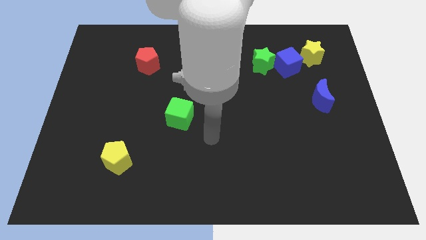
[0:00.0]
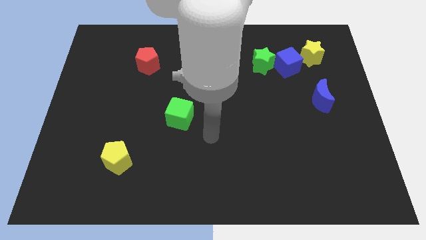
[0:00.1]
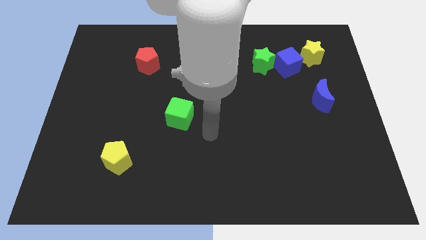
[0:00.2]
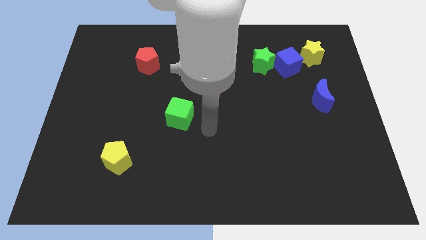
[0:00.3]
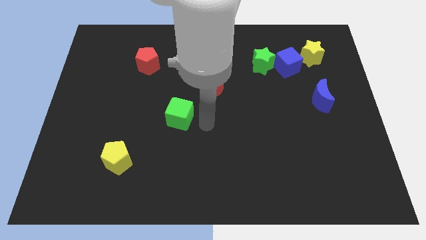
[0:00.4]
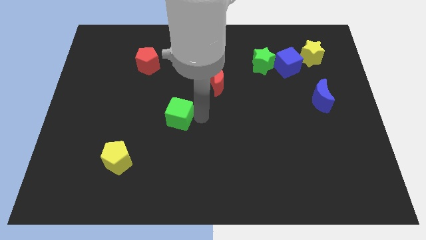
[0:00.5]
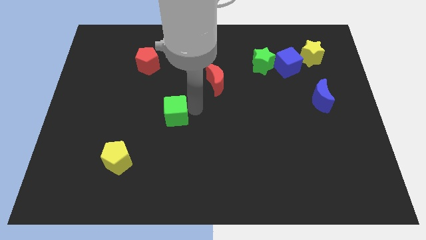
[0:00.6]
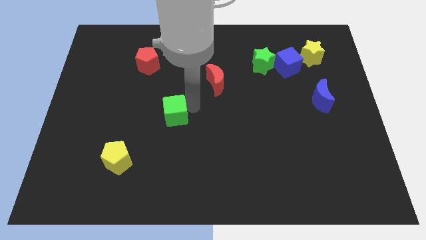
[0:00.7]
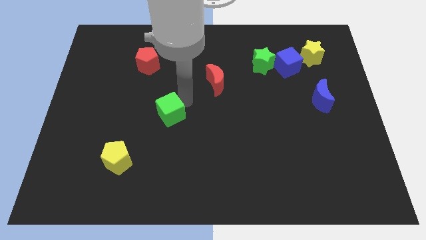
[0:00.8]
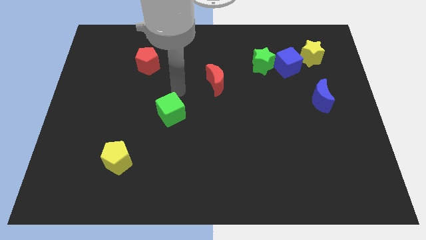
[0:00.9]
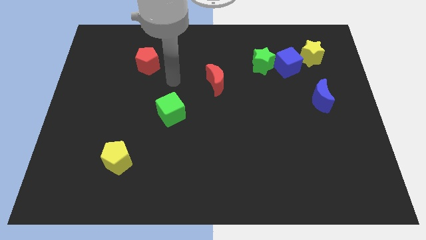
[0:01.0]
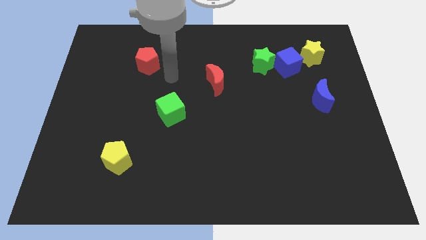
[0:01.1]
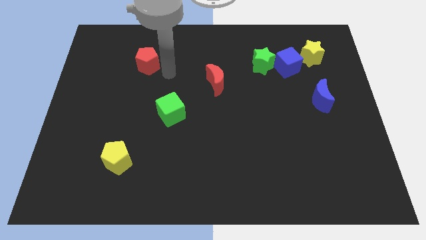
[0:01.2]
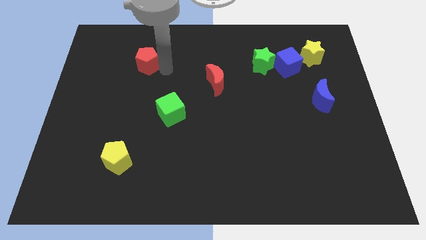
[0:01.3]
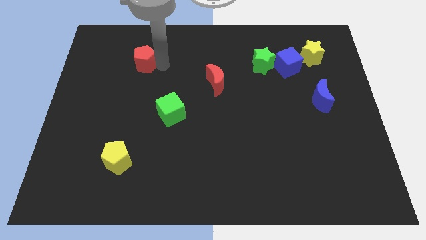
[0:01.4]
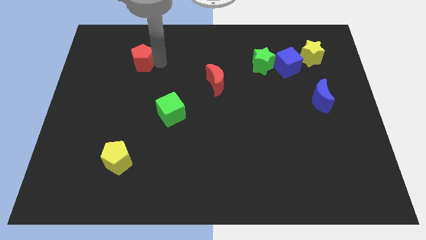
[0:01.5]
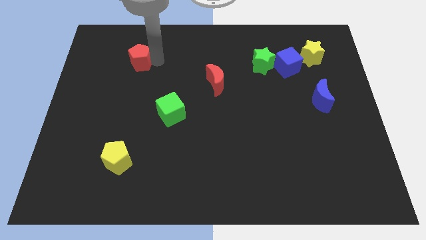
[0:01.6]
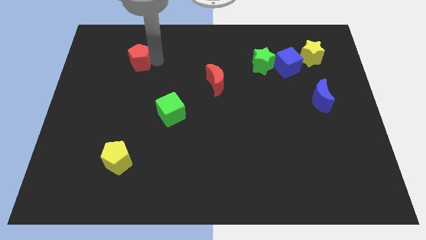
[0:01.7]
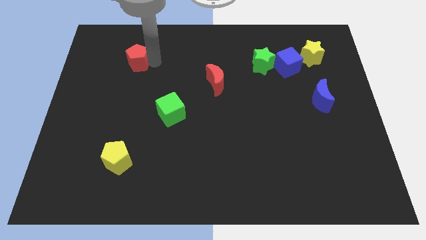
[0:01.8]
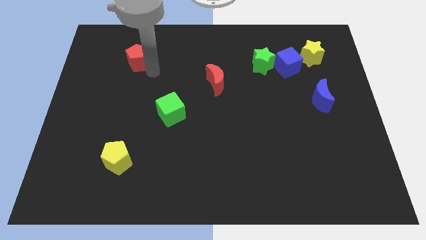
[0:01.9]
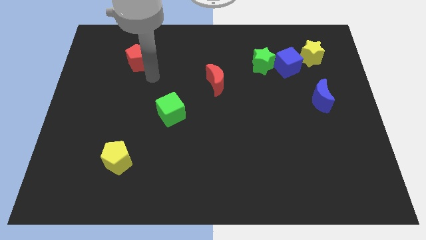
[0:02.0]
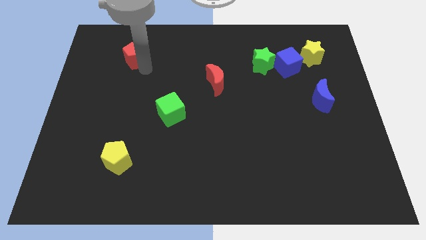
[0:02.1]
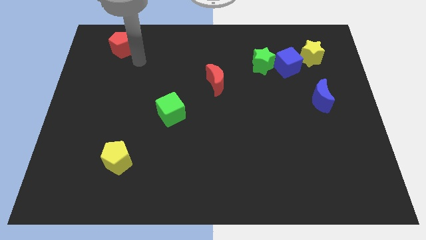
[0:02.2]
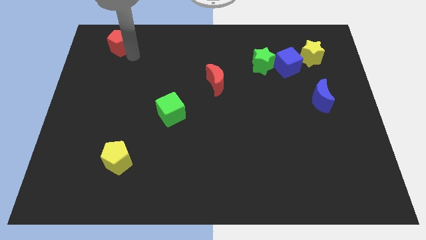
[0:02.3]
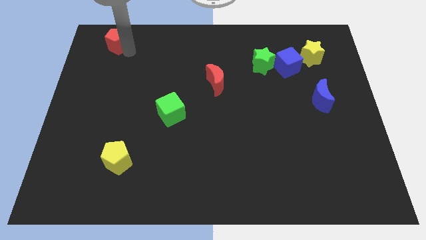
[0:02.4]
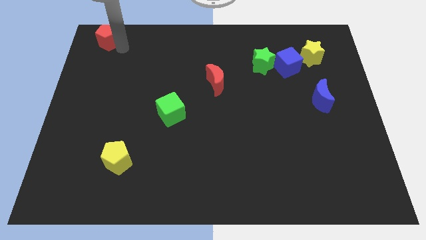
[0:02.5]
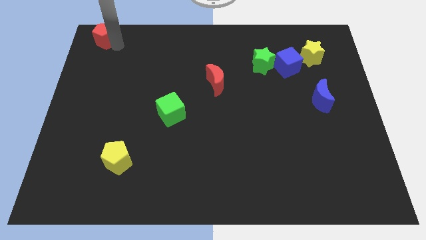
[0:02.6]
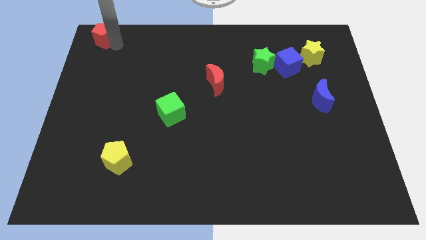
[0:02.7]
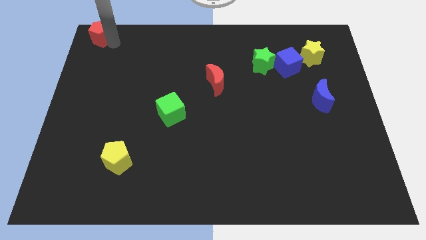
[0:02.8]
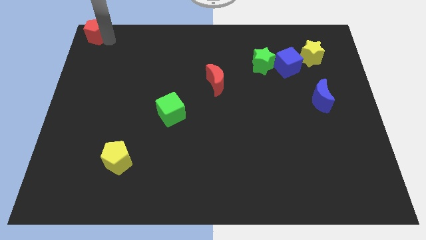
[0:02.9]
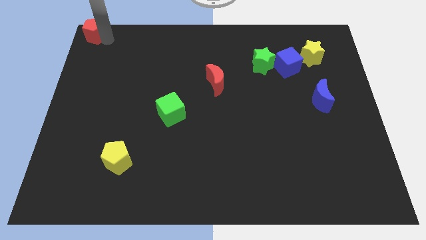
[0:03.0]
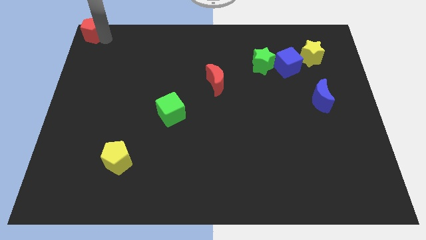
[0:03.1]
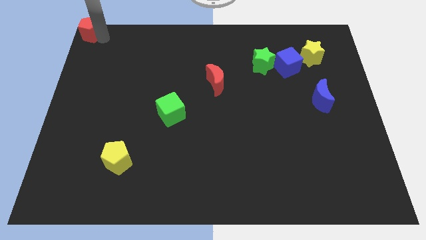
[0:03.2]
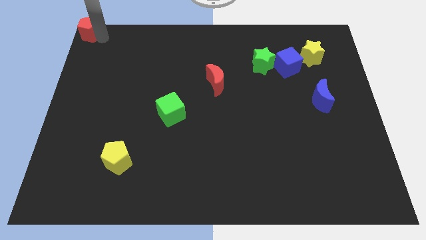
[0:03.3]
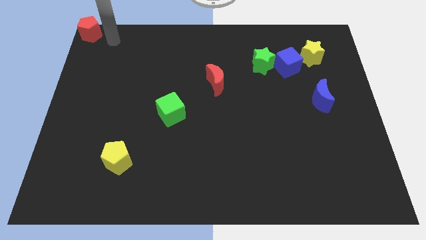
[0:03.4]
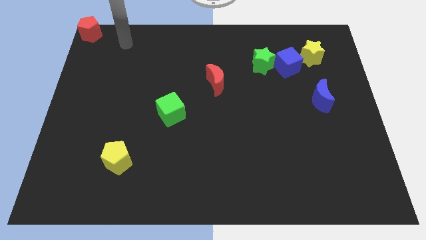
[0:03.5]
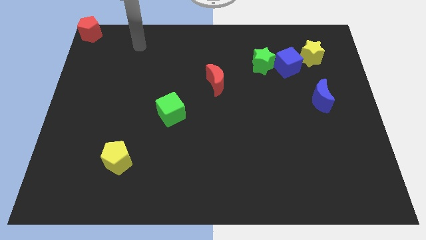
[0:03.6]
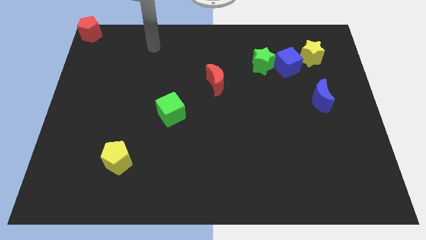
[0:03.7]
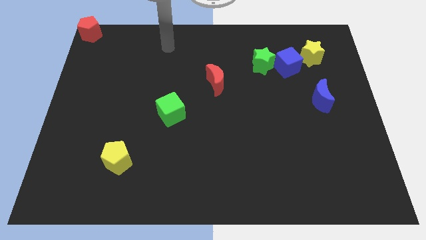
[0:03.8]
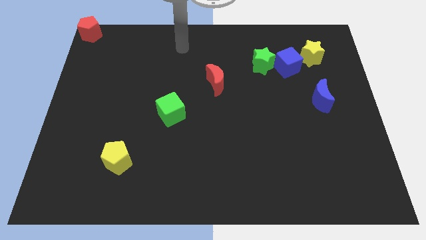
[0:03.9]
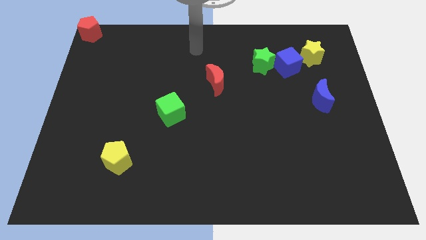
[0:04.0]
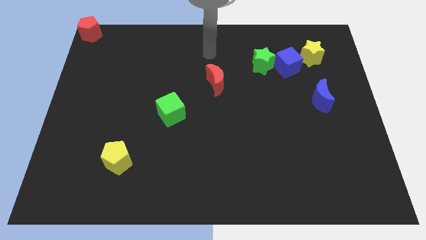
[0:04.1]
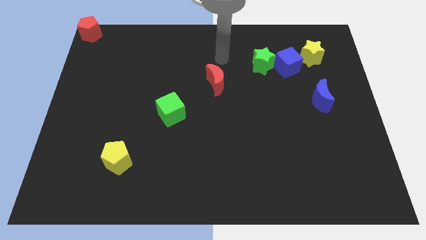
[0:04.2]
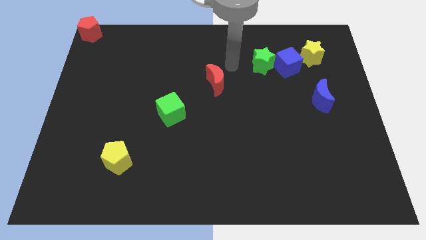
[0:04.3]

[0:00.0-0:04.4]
move the red pentagon to the top left corner of the board

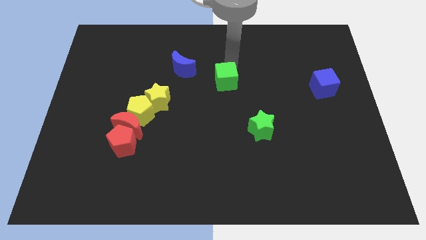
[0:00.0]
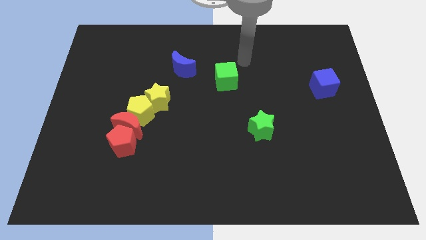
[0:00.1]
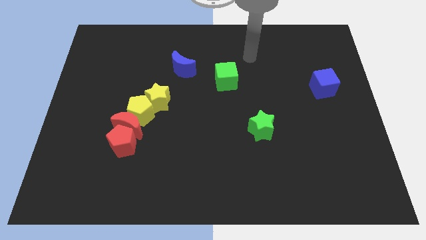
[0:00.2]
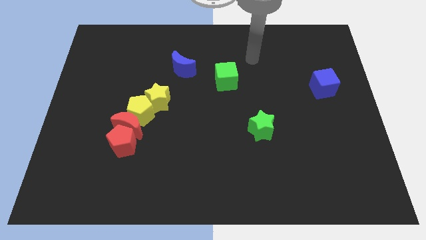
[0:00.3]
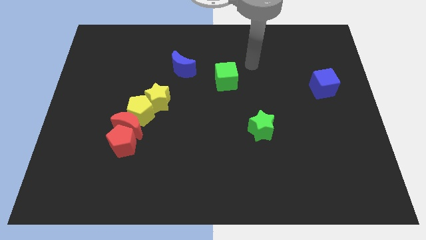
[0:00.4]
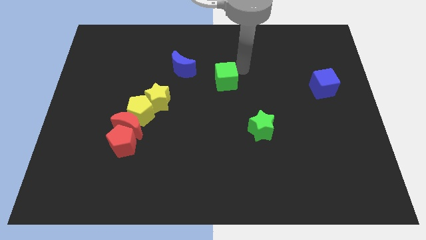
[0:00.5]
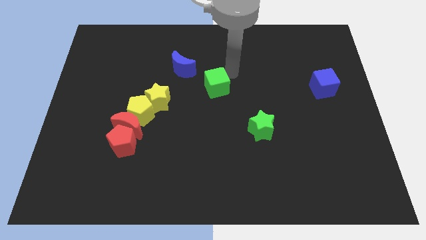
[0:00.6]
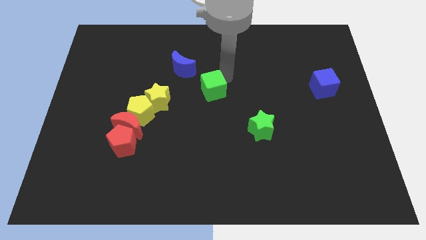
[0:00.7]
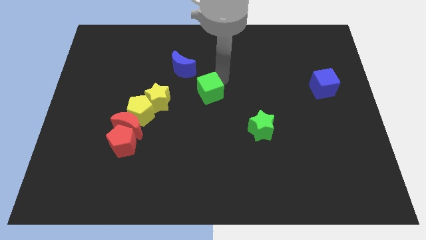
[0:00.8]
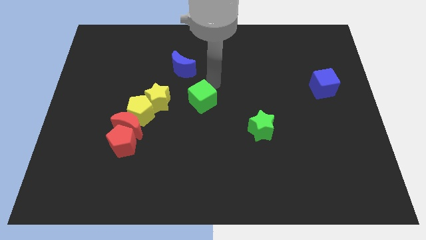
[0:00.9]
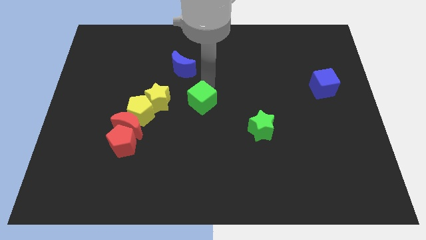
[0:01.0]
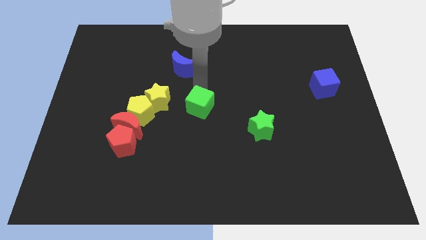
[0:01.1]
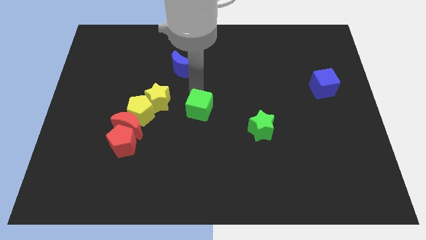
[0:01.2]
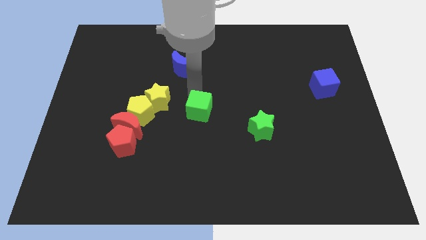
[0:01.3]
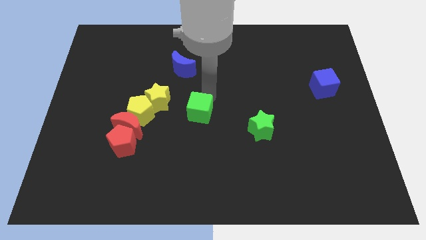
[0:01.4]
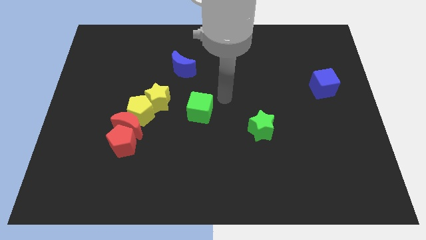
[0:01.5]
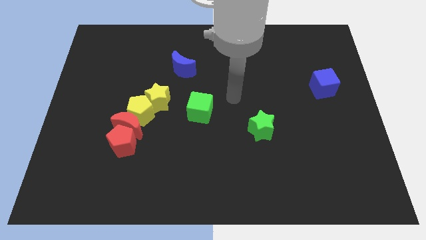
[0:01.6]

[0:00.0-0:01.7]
move the green cube diagonal to the green star

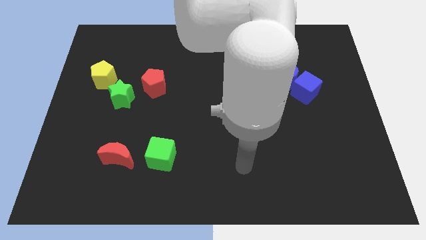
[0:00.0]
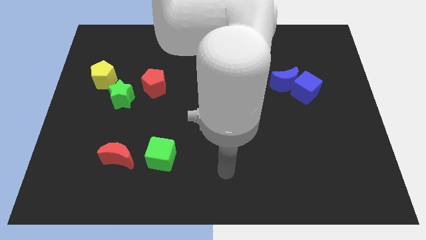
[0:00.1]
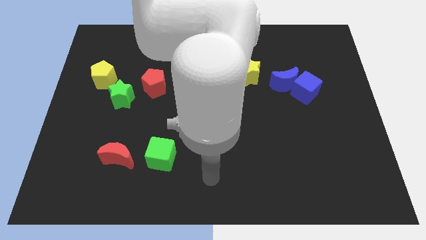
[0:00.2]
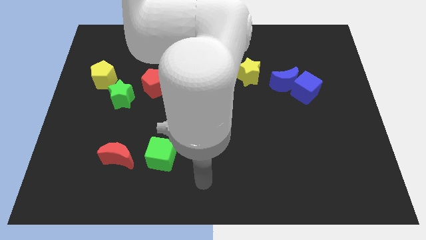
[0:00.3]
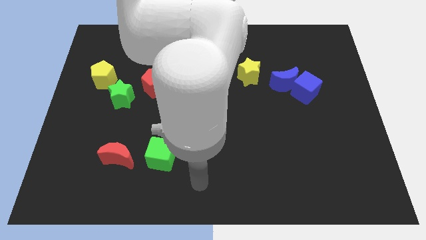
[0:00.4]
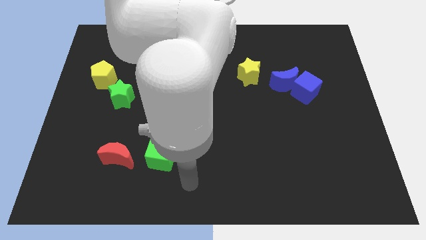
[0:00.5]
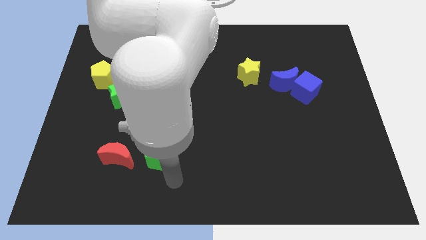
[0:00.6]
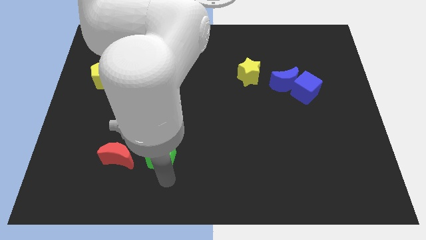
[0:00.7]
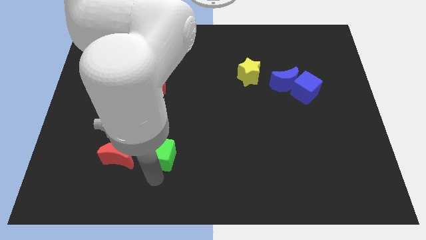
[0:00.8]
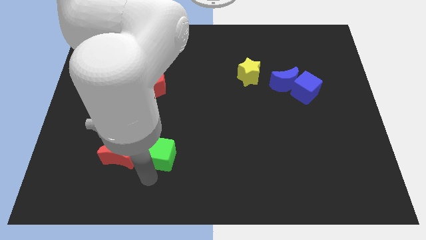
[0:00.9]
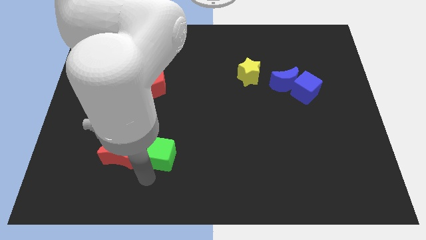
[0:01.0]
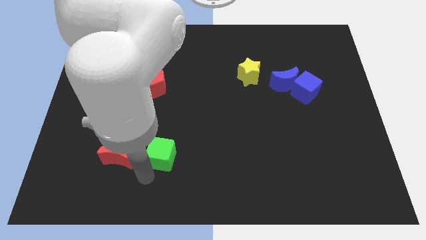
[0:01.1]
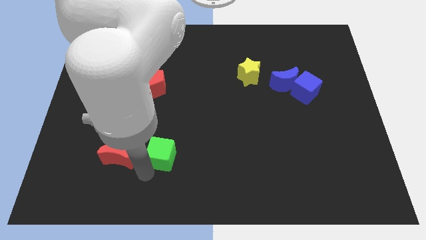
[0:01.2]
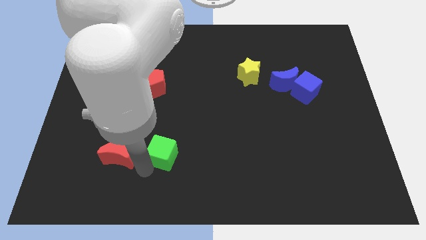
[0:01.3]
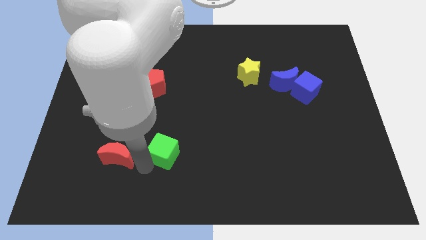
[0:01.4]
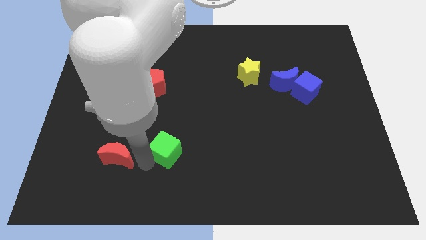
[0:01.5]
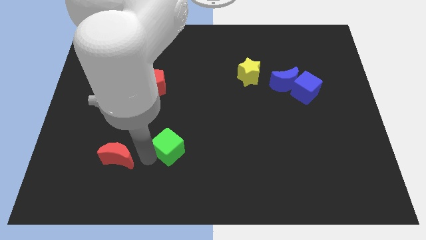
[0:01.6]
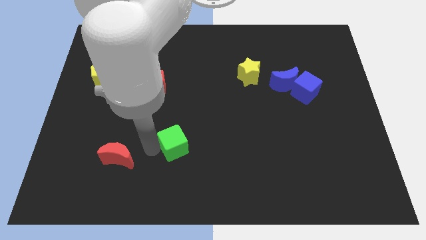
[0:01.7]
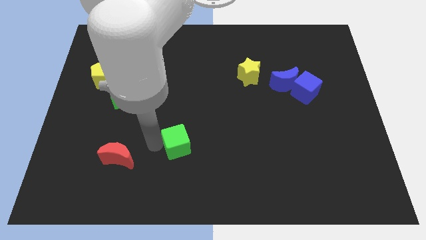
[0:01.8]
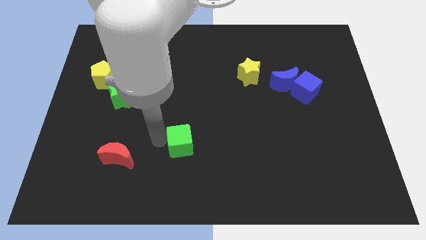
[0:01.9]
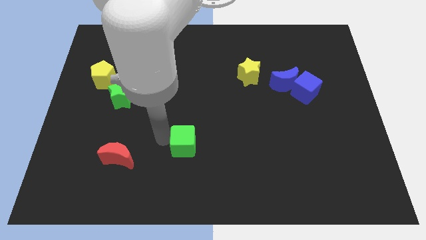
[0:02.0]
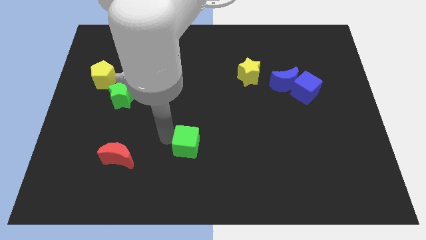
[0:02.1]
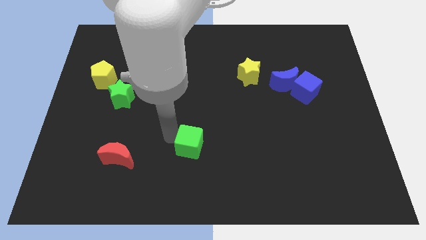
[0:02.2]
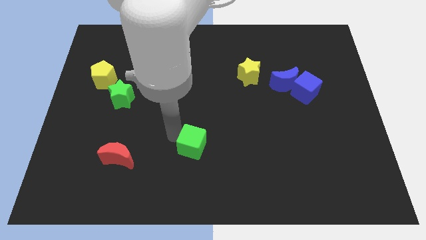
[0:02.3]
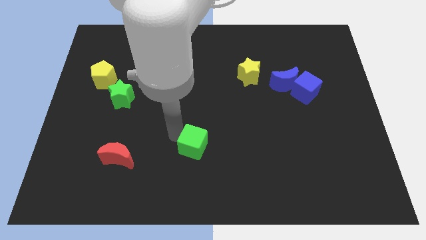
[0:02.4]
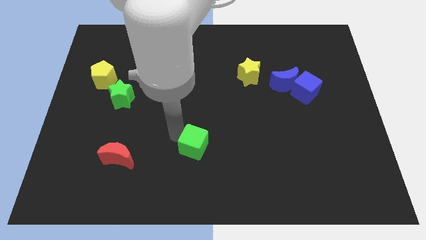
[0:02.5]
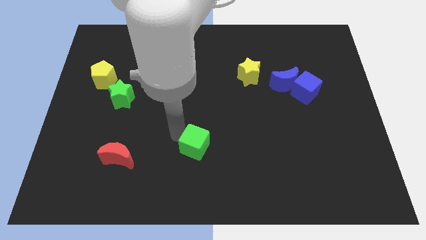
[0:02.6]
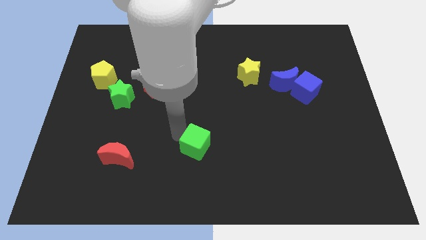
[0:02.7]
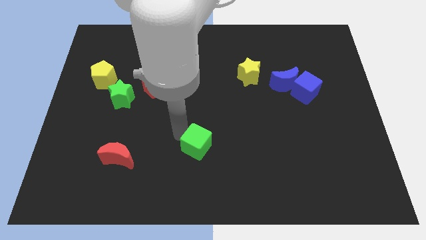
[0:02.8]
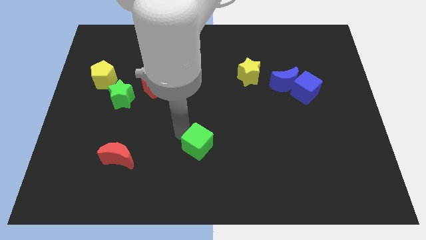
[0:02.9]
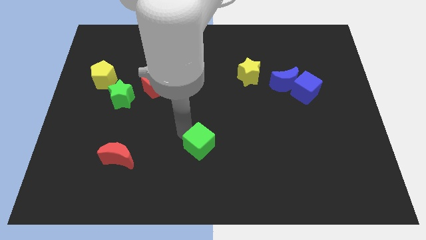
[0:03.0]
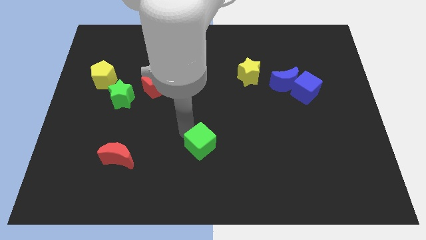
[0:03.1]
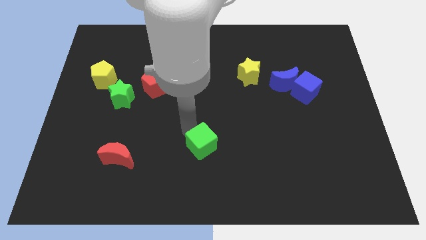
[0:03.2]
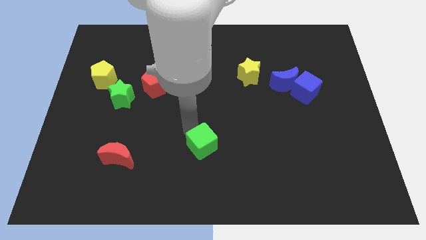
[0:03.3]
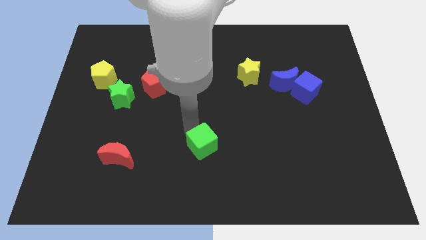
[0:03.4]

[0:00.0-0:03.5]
move green cube to right side
